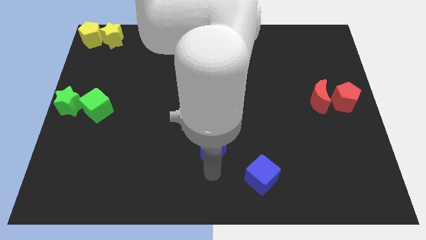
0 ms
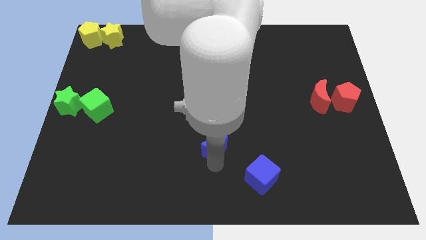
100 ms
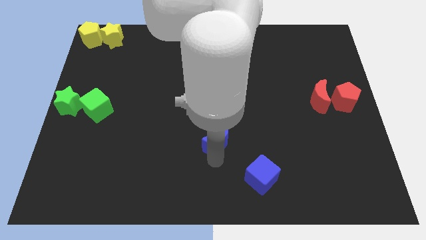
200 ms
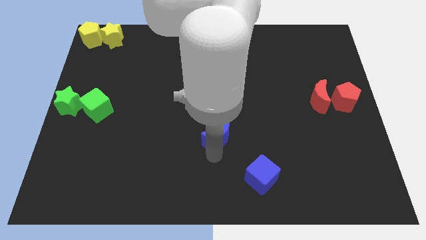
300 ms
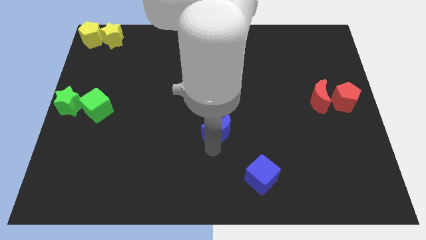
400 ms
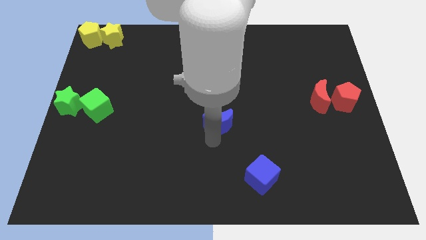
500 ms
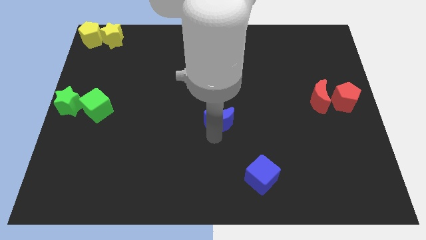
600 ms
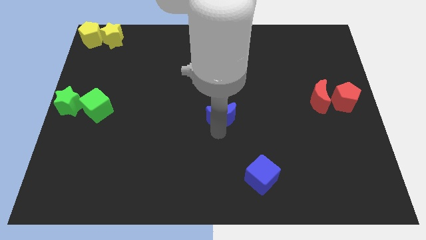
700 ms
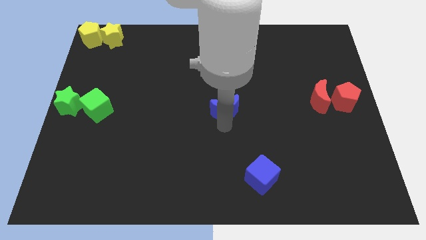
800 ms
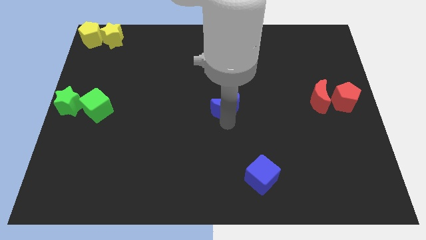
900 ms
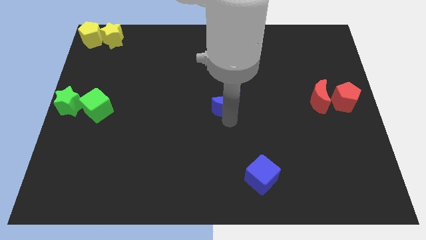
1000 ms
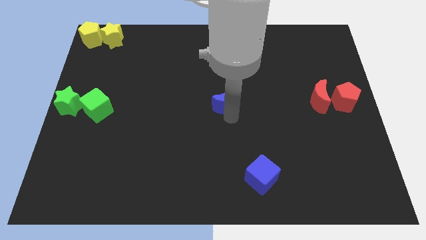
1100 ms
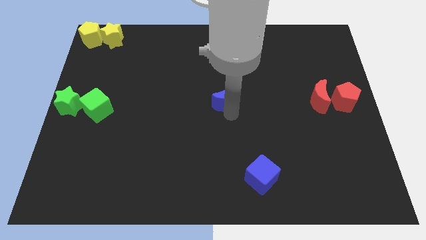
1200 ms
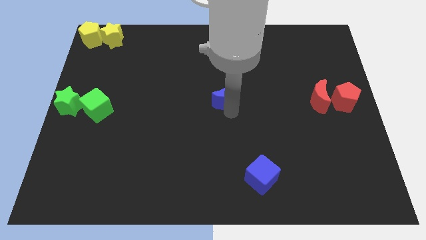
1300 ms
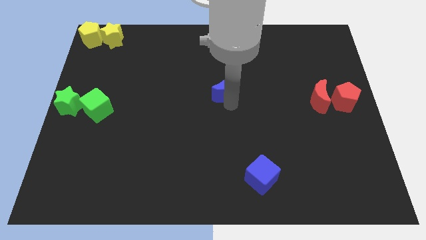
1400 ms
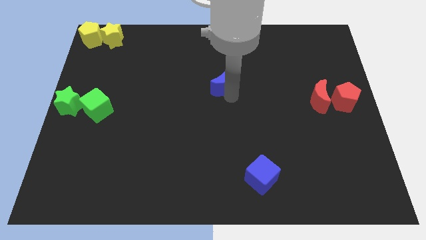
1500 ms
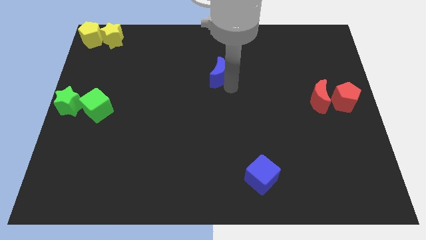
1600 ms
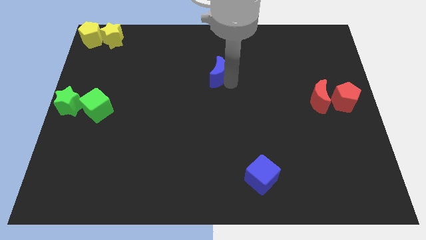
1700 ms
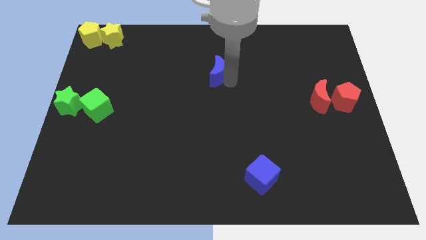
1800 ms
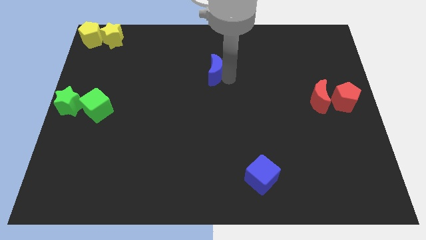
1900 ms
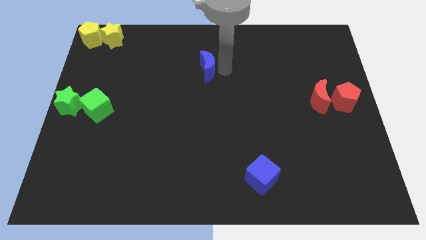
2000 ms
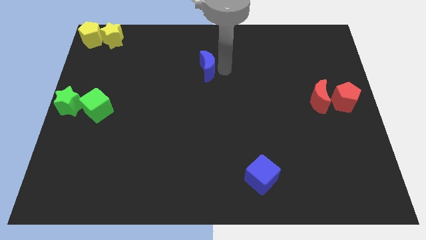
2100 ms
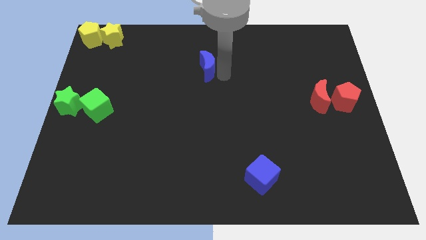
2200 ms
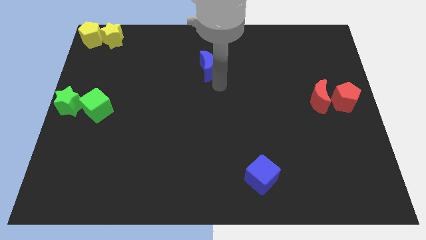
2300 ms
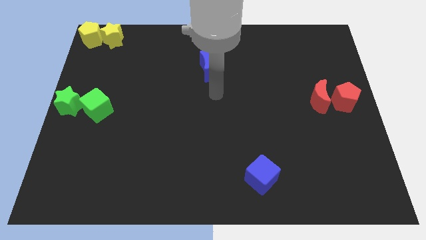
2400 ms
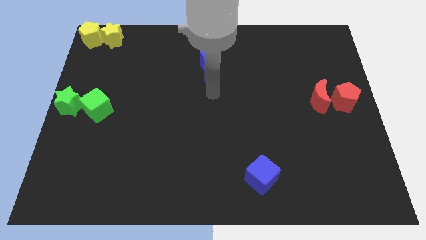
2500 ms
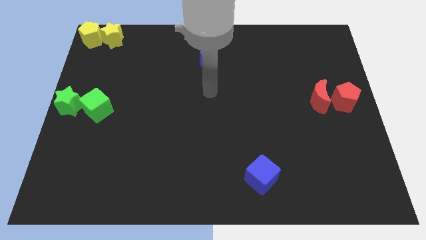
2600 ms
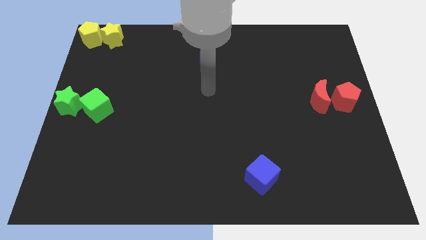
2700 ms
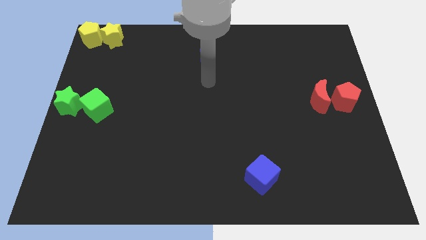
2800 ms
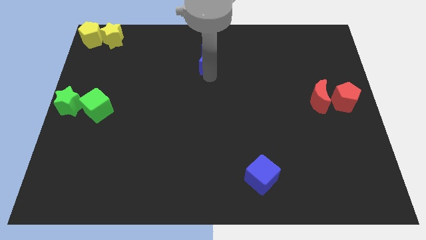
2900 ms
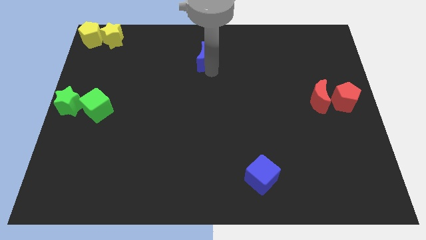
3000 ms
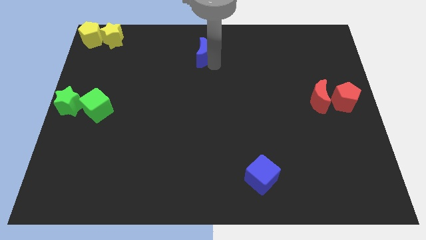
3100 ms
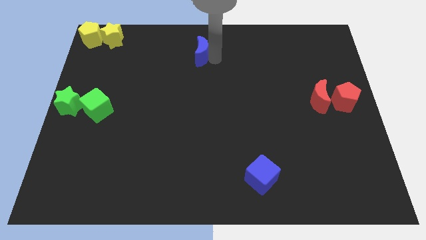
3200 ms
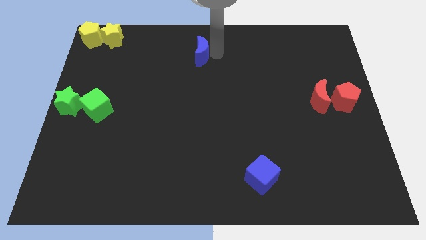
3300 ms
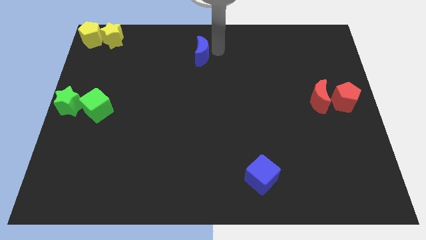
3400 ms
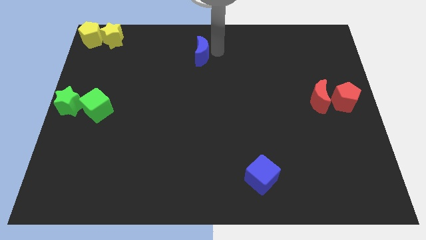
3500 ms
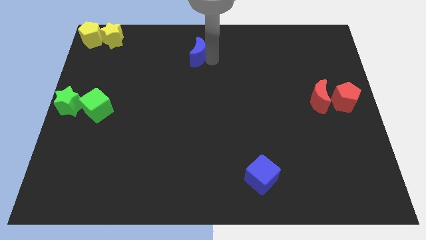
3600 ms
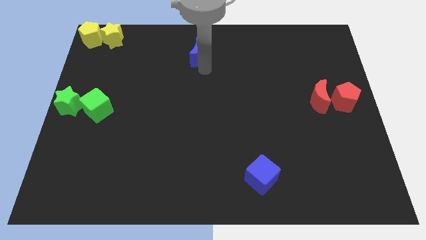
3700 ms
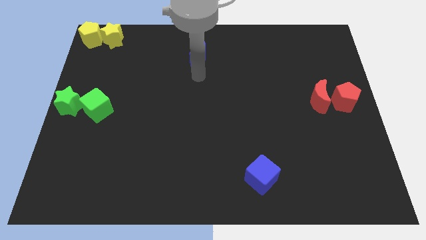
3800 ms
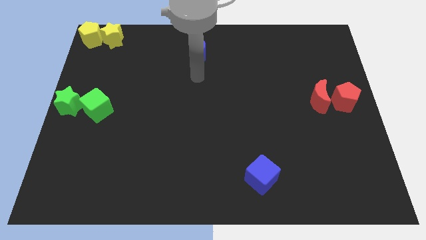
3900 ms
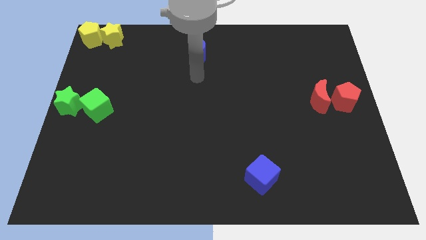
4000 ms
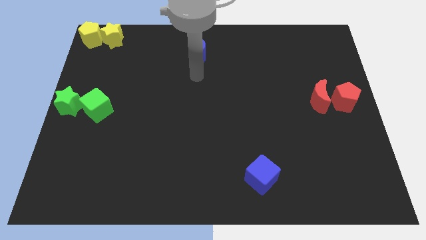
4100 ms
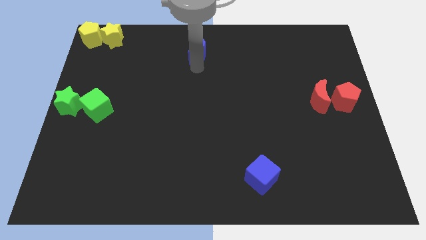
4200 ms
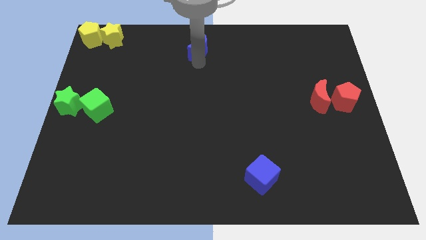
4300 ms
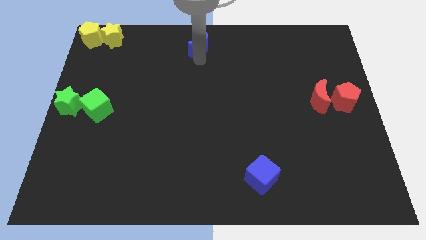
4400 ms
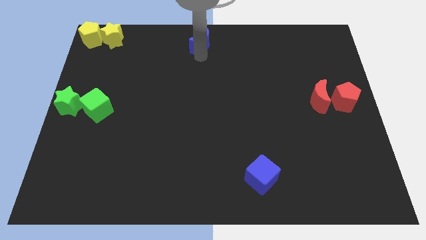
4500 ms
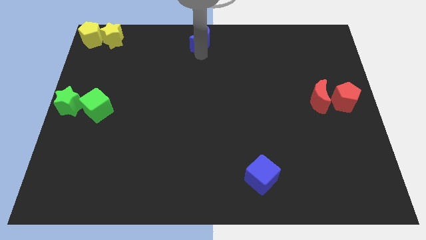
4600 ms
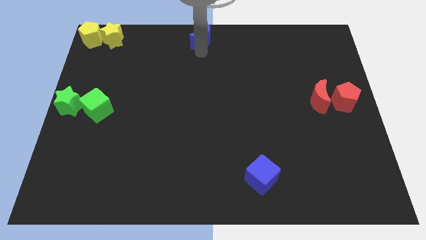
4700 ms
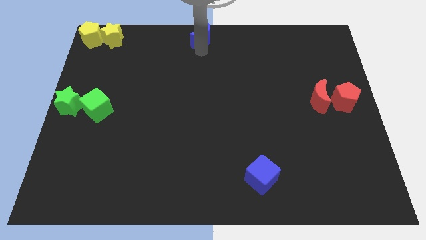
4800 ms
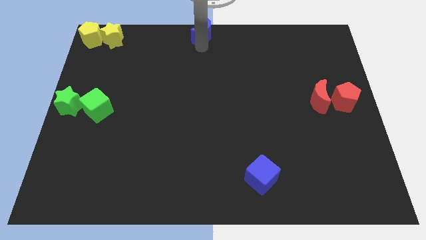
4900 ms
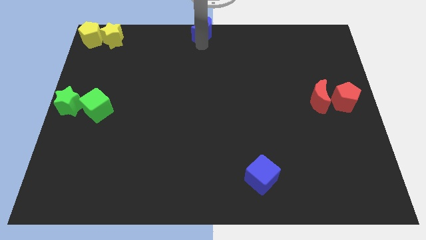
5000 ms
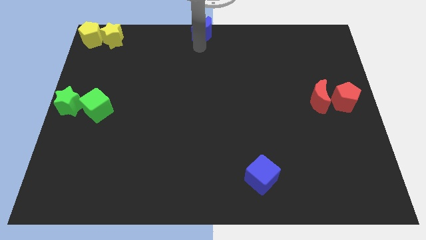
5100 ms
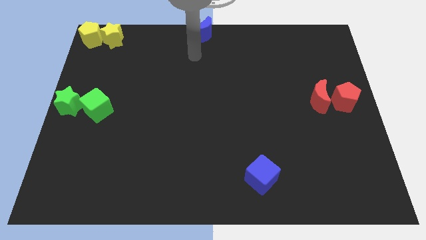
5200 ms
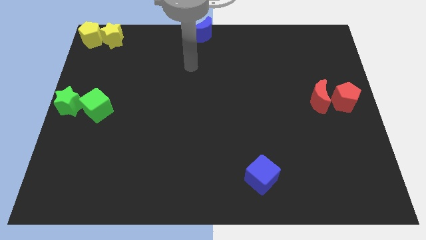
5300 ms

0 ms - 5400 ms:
push the blue moon to the top center

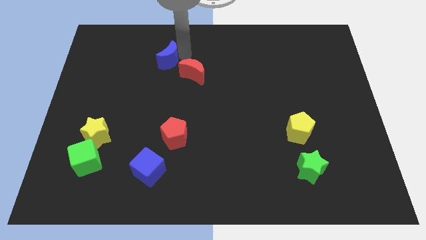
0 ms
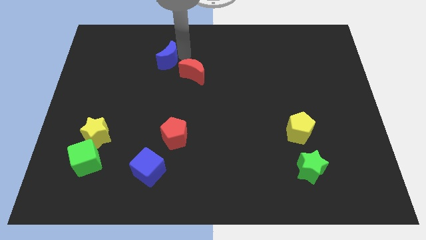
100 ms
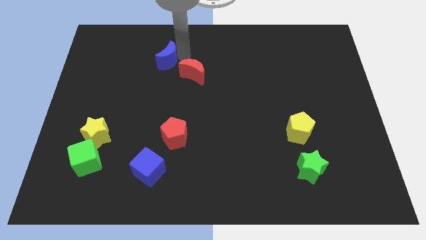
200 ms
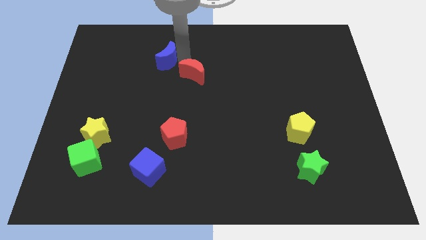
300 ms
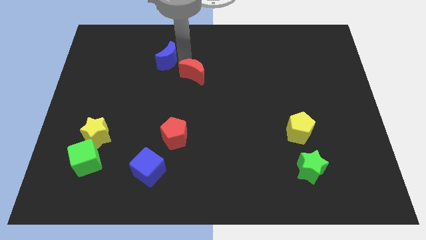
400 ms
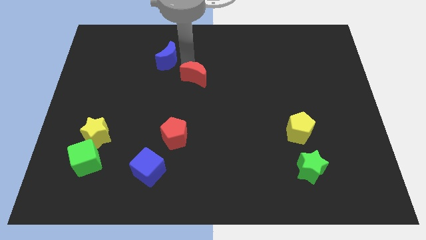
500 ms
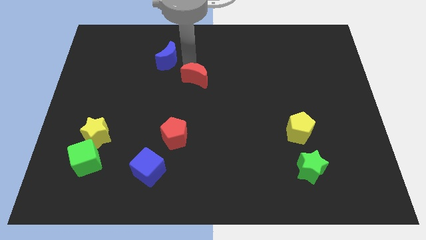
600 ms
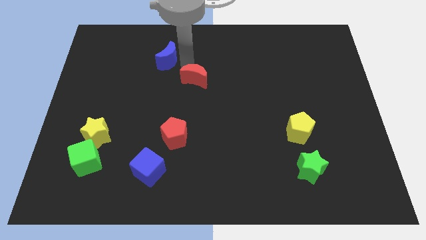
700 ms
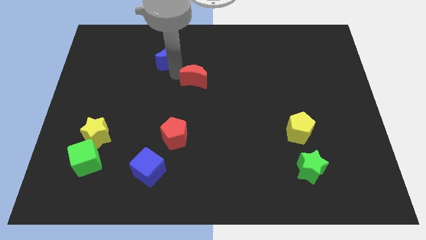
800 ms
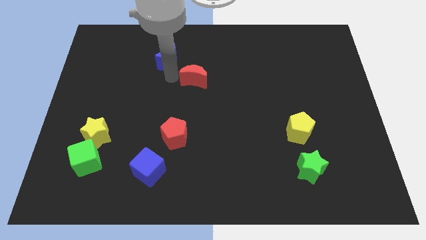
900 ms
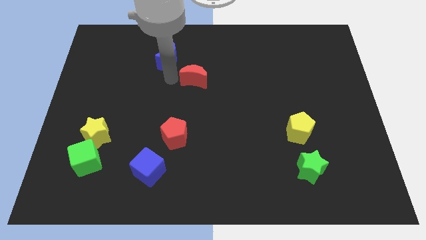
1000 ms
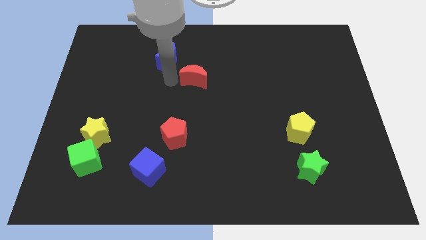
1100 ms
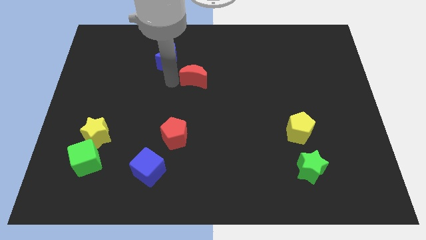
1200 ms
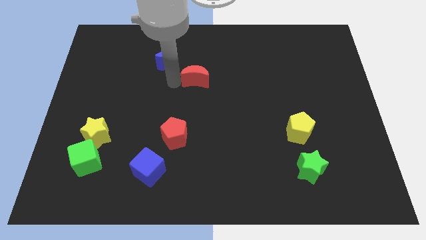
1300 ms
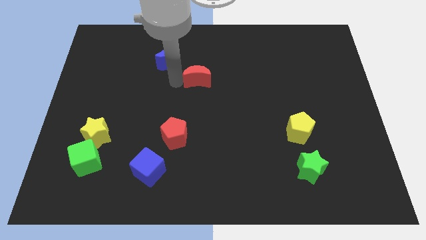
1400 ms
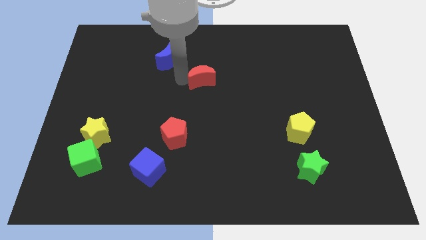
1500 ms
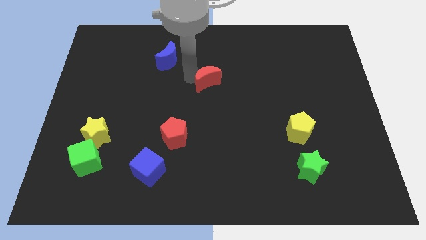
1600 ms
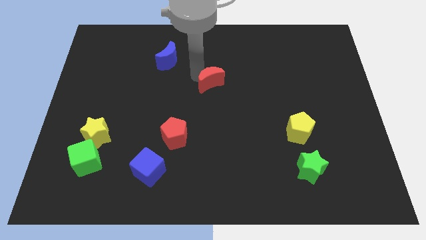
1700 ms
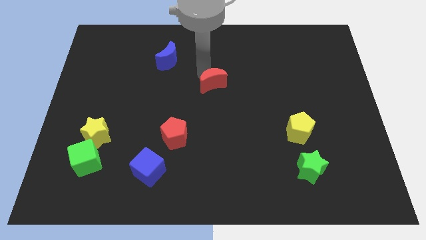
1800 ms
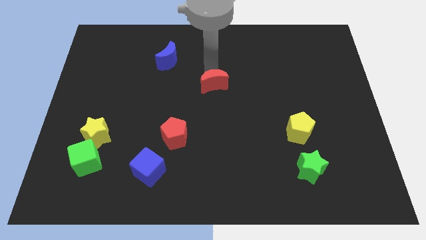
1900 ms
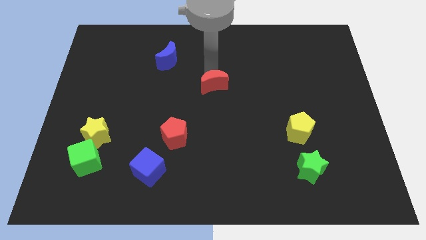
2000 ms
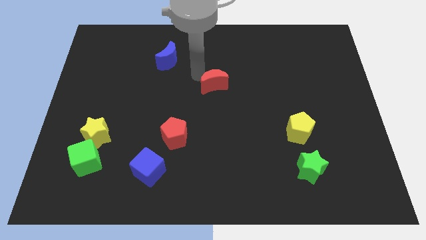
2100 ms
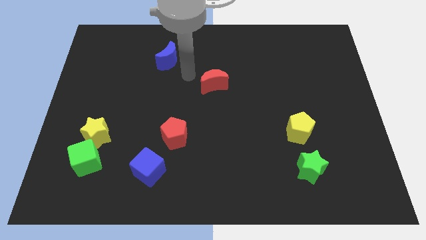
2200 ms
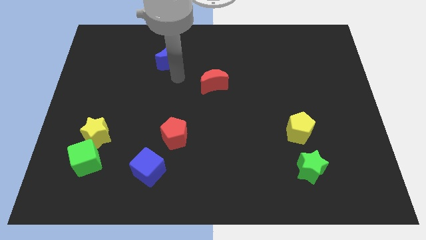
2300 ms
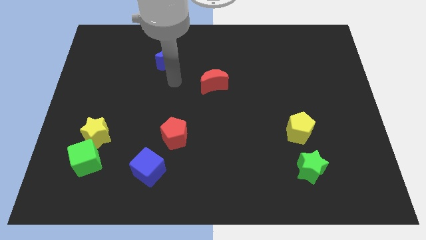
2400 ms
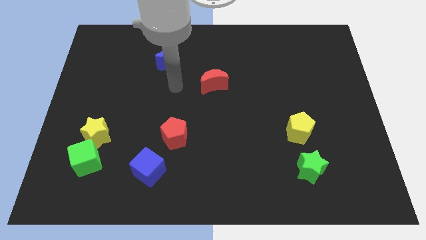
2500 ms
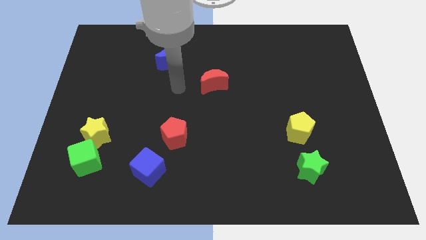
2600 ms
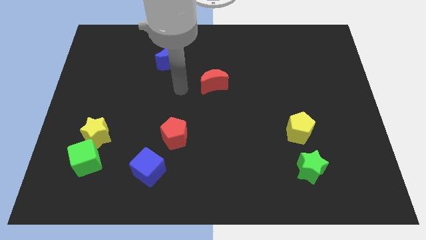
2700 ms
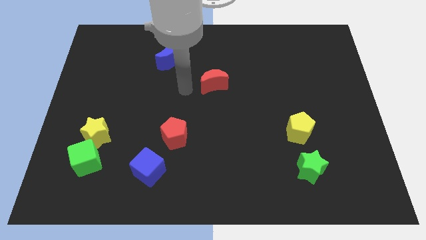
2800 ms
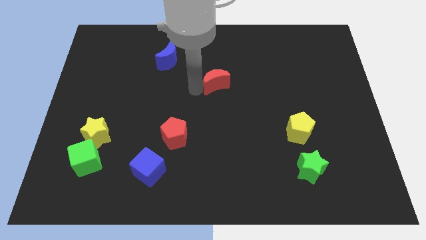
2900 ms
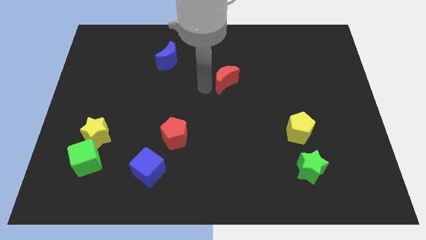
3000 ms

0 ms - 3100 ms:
place red moon in between yellow pentagon and blue moon

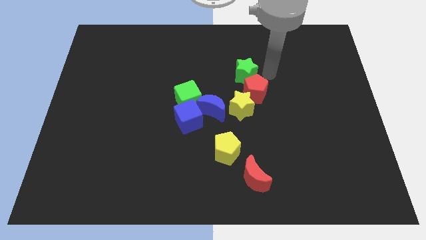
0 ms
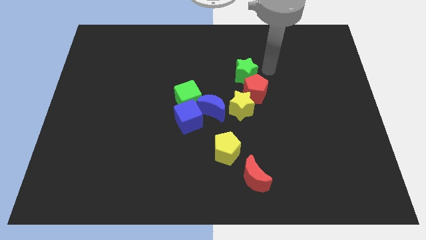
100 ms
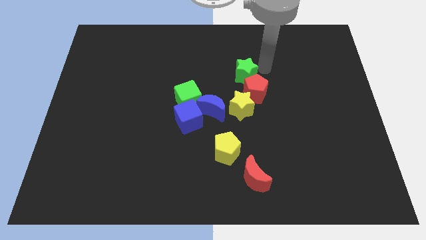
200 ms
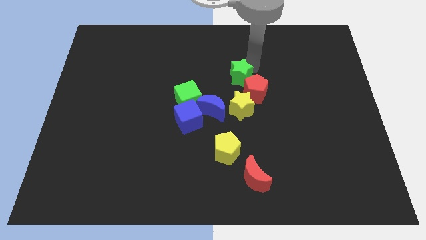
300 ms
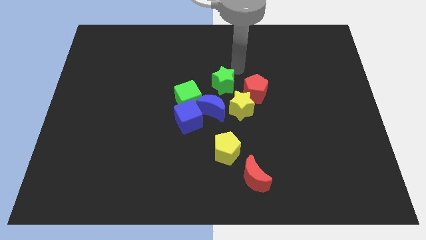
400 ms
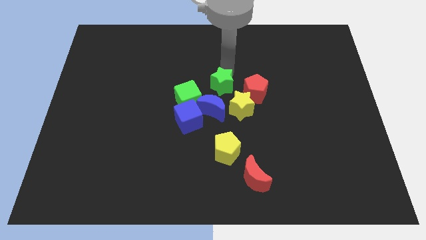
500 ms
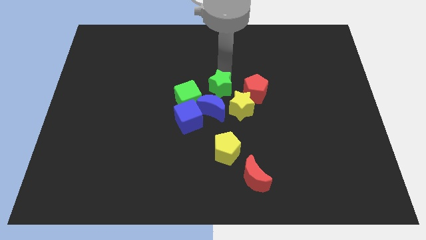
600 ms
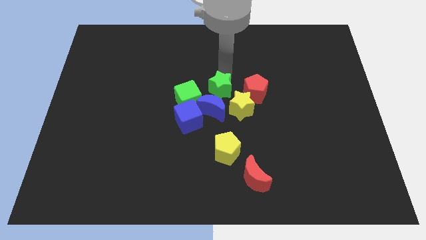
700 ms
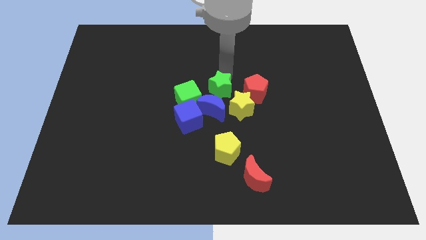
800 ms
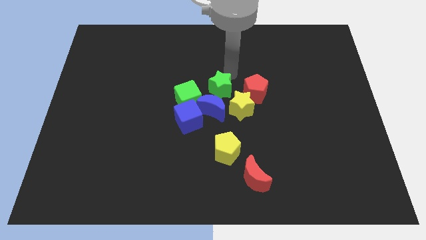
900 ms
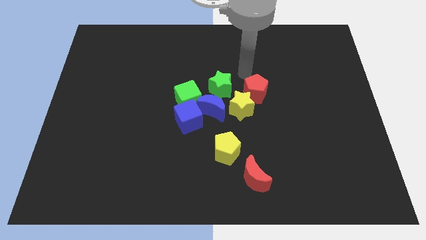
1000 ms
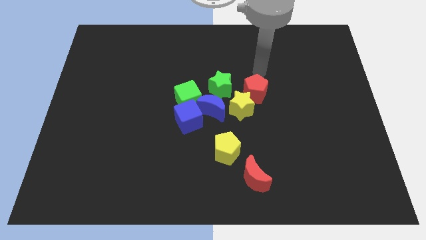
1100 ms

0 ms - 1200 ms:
slide the green star slightly towards the blue crescent
